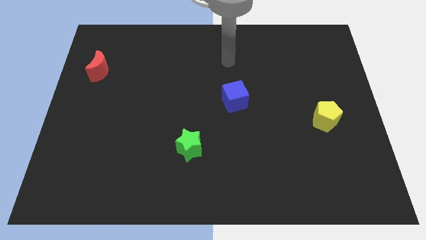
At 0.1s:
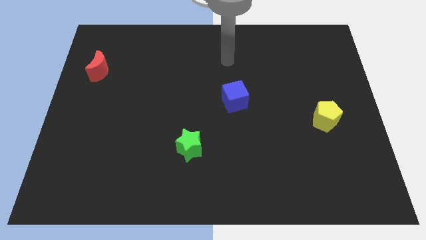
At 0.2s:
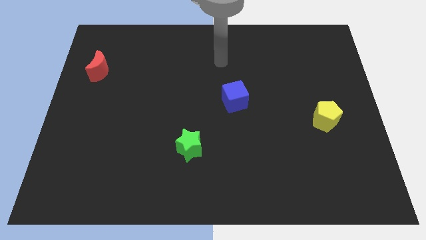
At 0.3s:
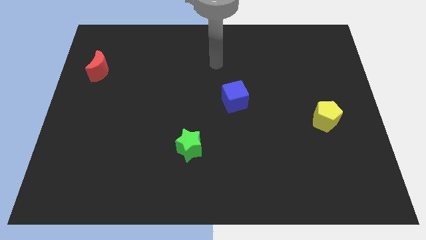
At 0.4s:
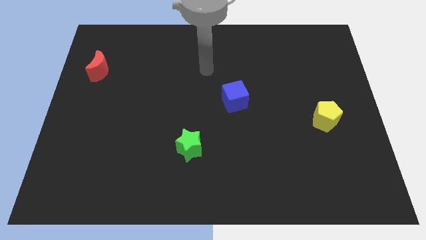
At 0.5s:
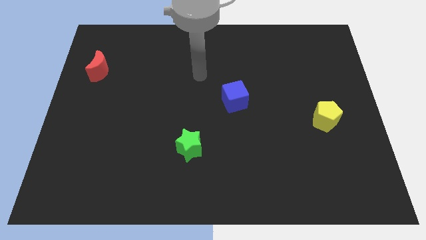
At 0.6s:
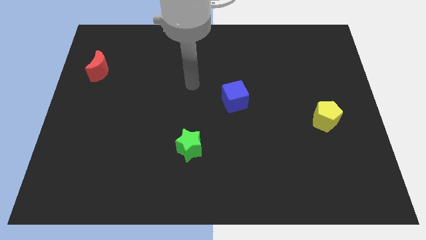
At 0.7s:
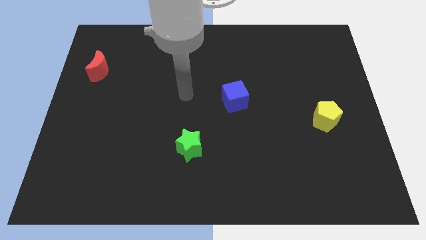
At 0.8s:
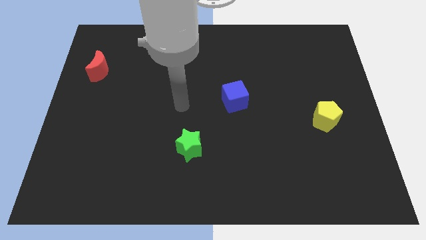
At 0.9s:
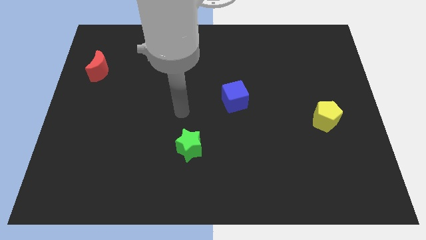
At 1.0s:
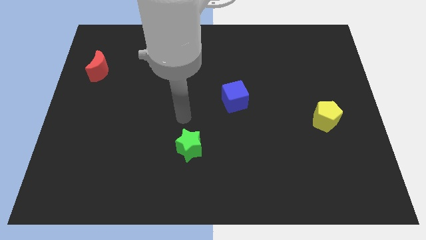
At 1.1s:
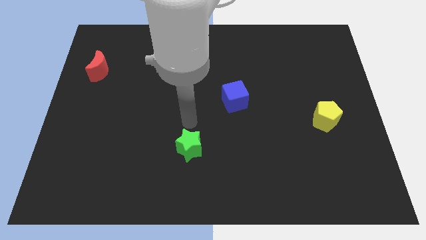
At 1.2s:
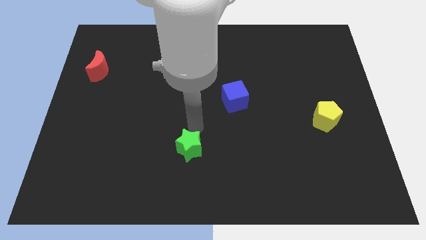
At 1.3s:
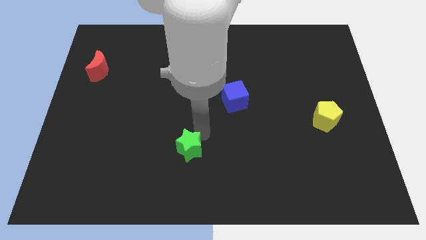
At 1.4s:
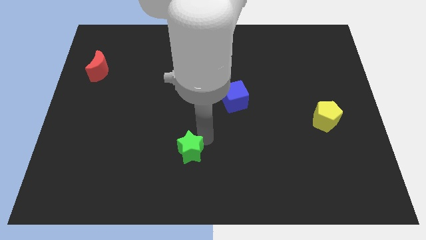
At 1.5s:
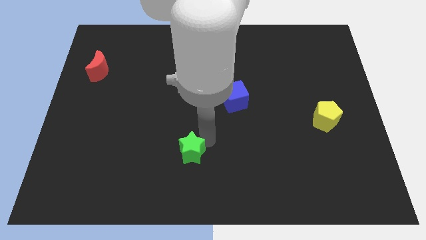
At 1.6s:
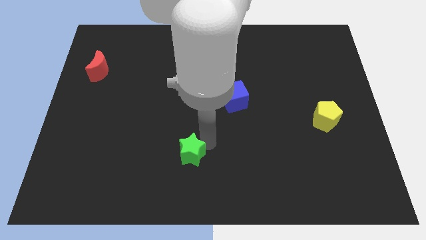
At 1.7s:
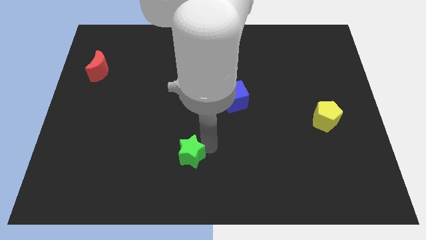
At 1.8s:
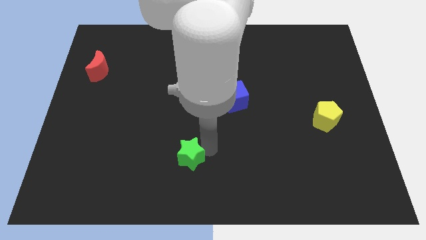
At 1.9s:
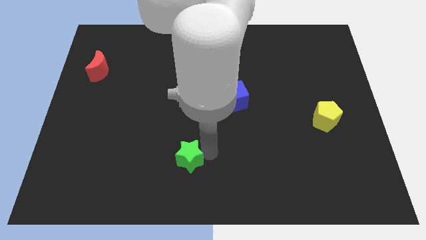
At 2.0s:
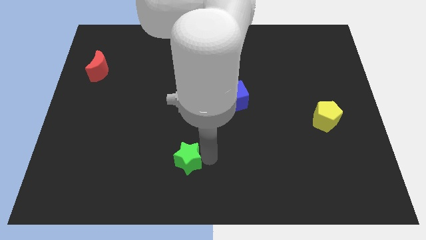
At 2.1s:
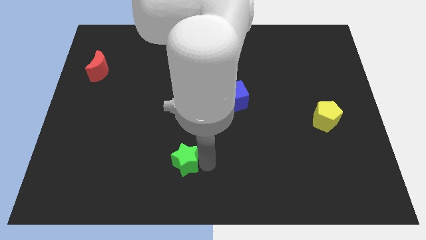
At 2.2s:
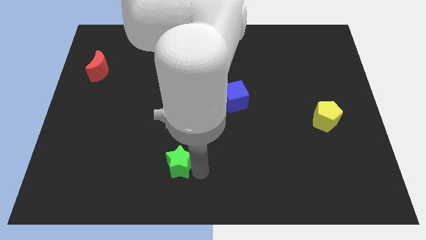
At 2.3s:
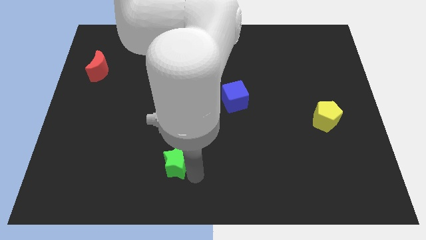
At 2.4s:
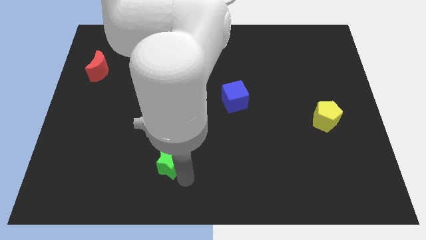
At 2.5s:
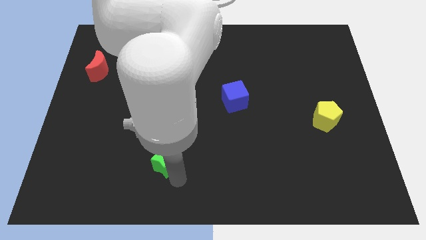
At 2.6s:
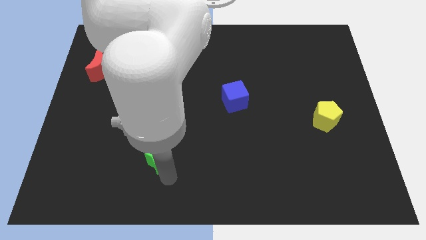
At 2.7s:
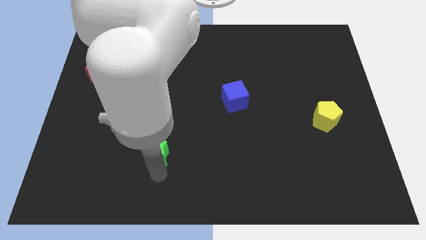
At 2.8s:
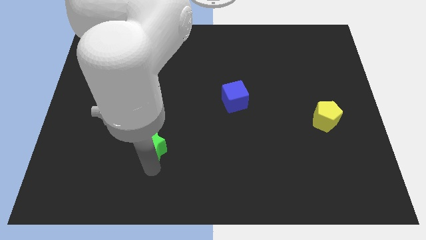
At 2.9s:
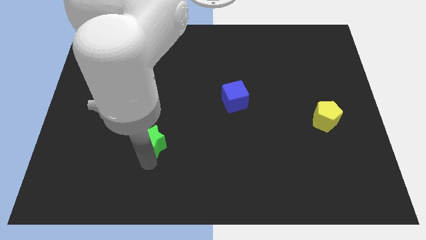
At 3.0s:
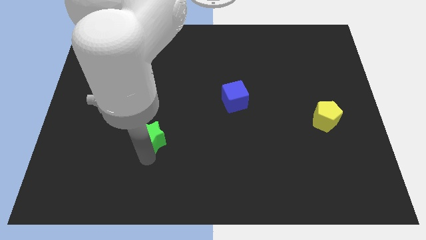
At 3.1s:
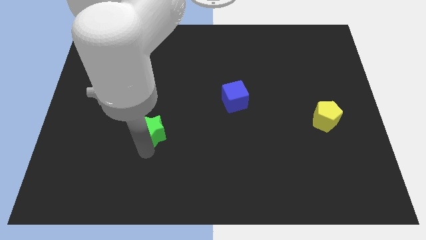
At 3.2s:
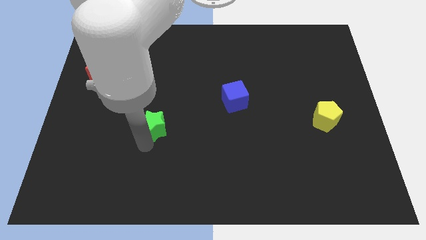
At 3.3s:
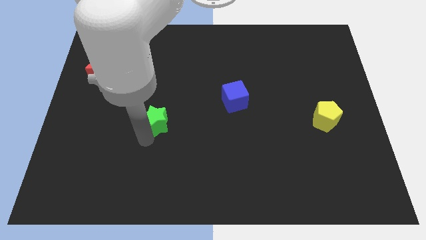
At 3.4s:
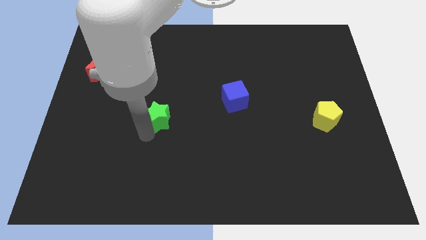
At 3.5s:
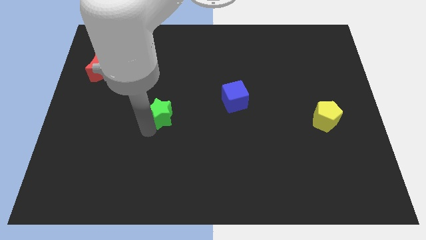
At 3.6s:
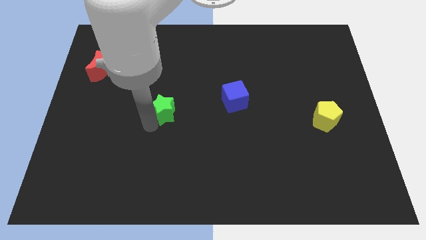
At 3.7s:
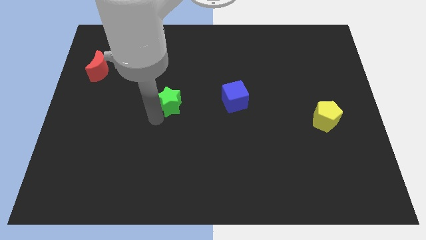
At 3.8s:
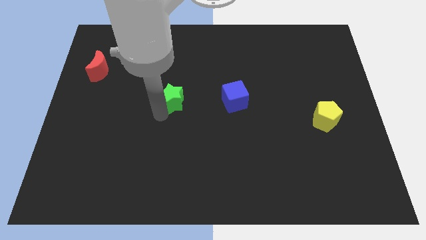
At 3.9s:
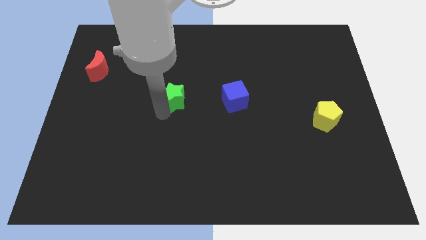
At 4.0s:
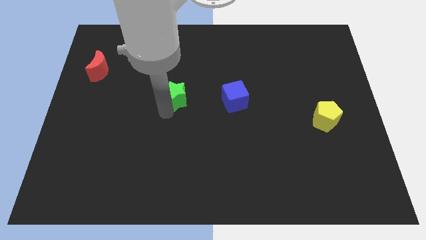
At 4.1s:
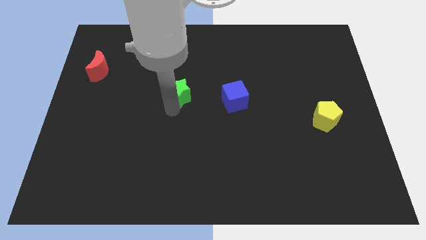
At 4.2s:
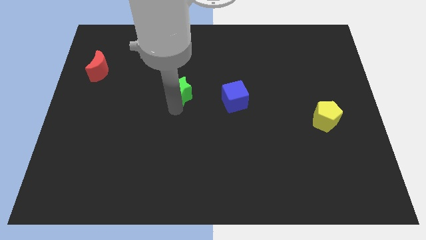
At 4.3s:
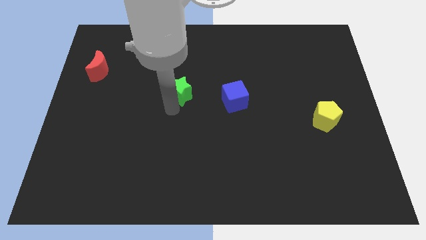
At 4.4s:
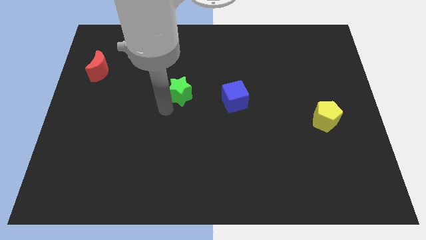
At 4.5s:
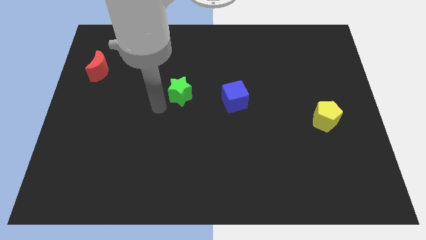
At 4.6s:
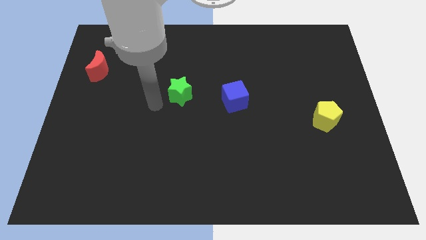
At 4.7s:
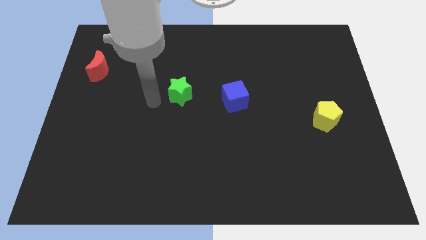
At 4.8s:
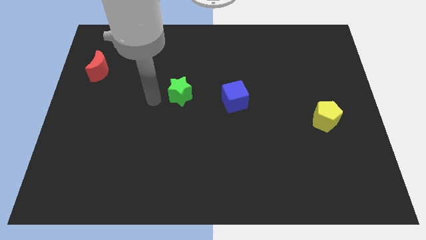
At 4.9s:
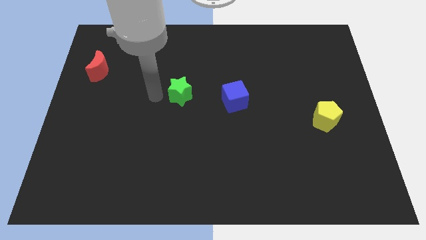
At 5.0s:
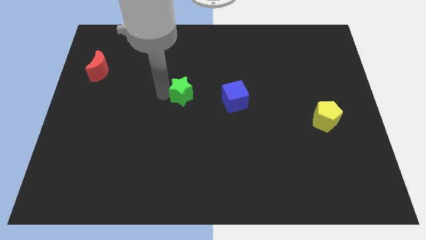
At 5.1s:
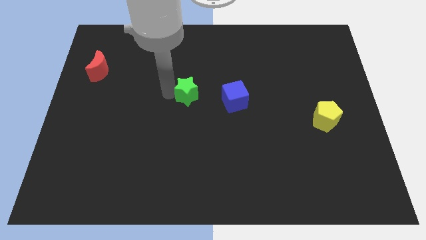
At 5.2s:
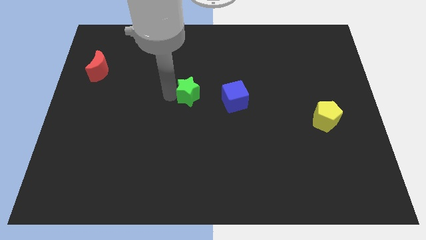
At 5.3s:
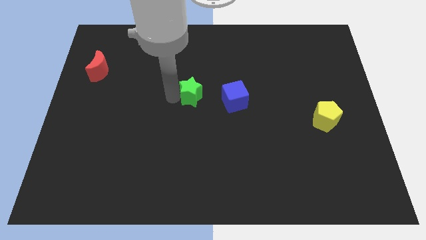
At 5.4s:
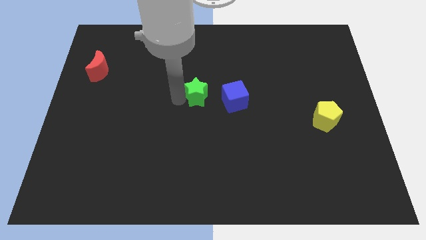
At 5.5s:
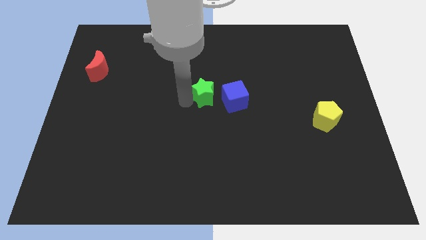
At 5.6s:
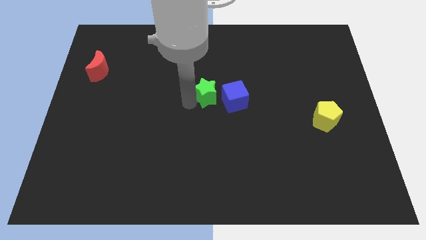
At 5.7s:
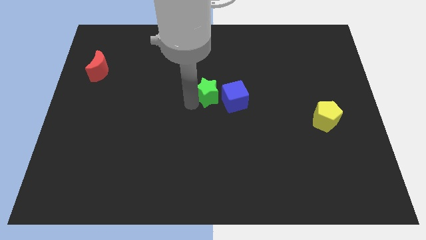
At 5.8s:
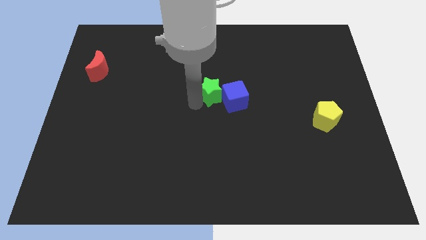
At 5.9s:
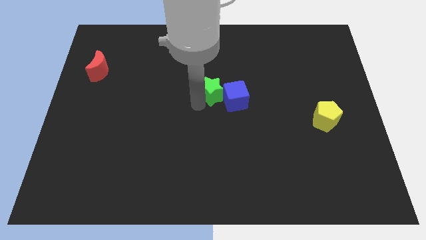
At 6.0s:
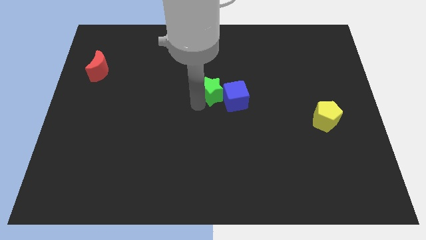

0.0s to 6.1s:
move the green star close to the cube

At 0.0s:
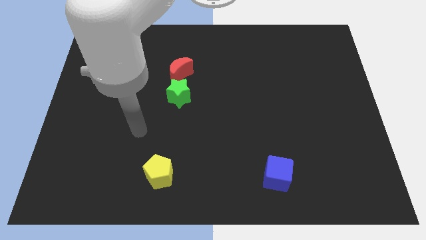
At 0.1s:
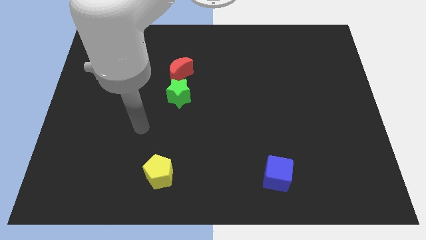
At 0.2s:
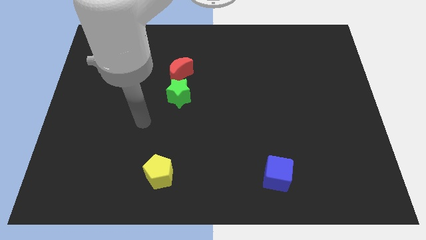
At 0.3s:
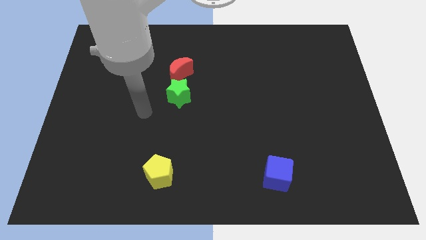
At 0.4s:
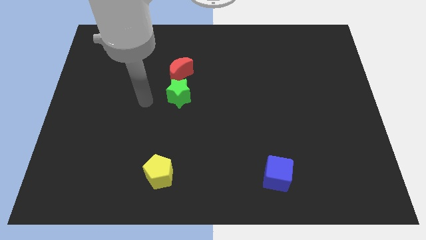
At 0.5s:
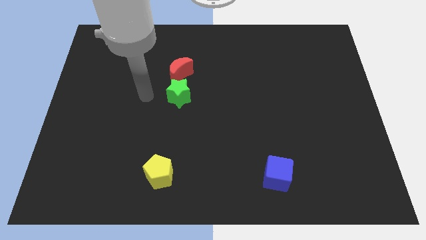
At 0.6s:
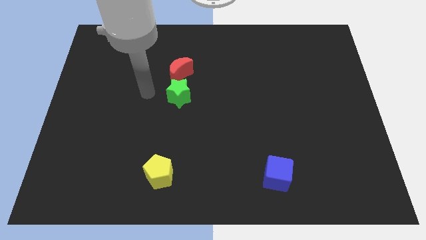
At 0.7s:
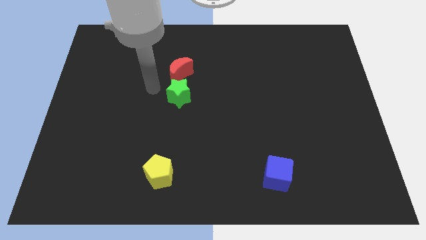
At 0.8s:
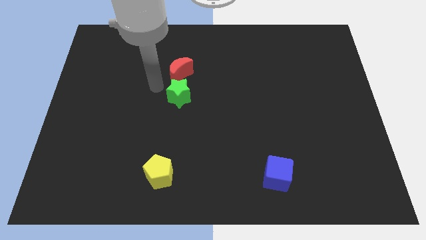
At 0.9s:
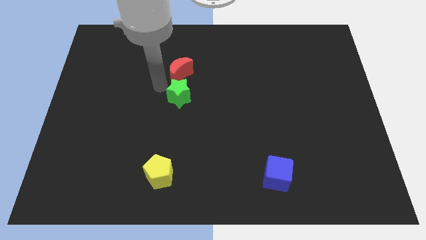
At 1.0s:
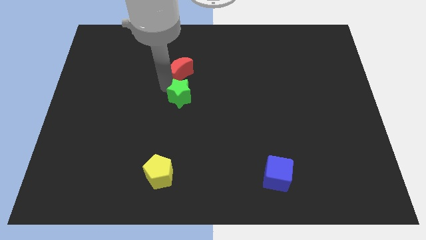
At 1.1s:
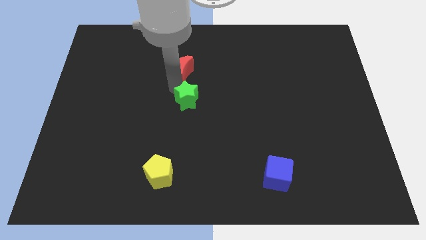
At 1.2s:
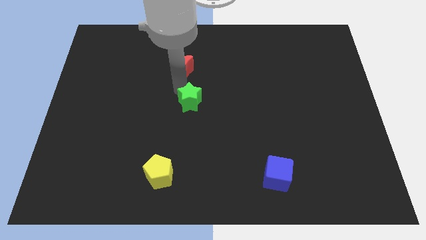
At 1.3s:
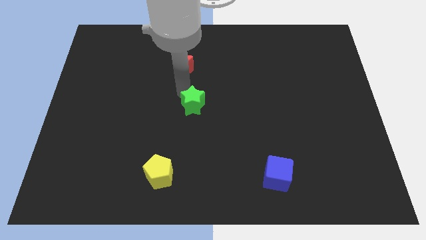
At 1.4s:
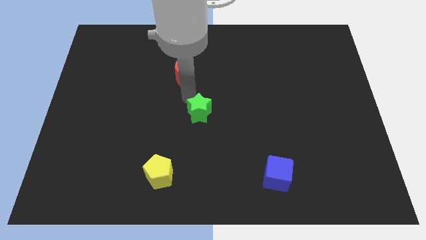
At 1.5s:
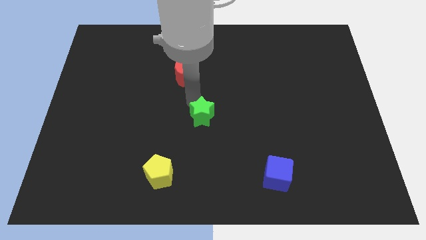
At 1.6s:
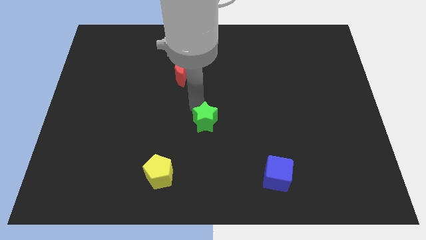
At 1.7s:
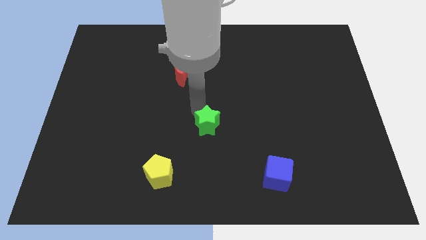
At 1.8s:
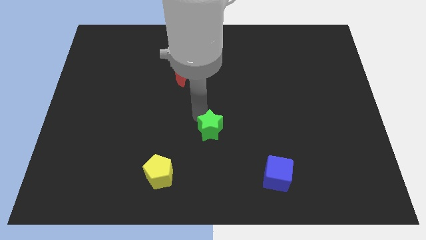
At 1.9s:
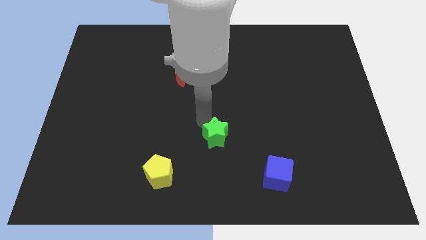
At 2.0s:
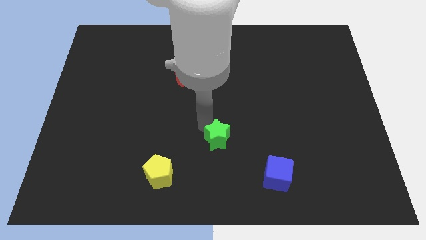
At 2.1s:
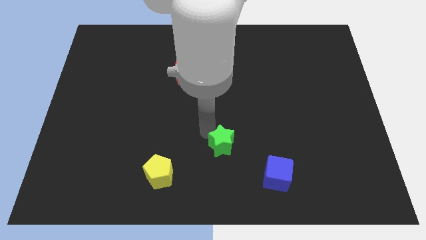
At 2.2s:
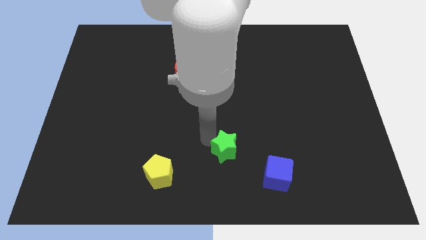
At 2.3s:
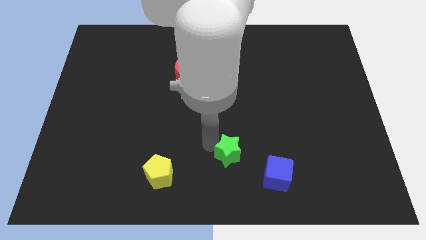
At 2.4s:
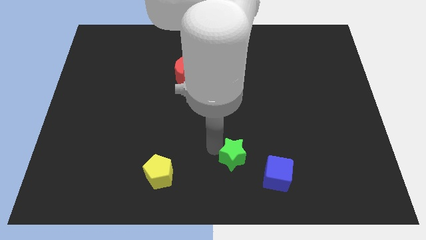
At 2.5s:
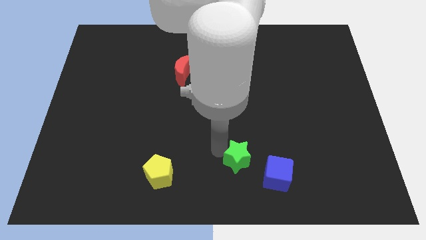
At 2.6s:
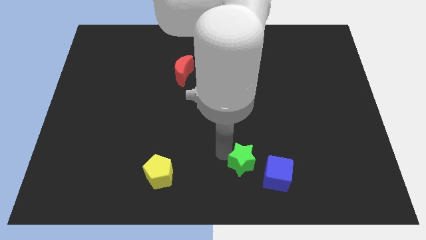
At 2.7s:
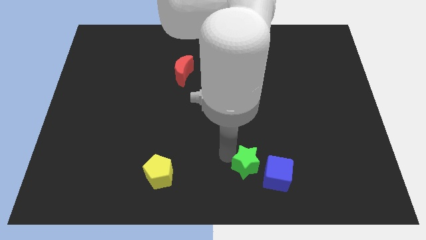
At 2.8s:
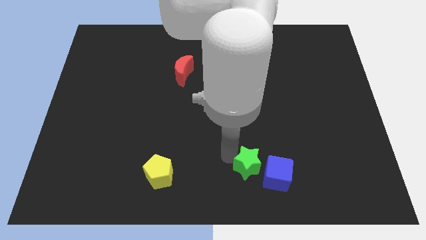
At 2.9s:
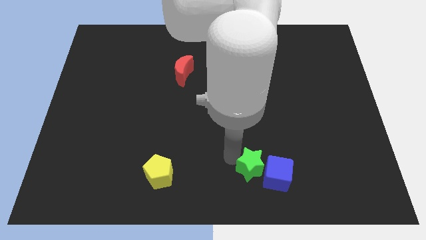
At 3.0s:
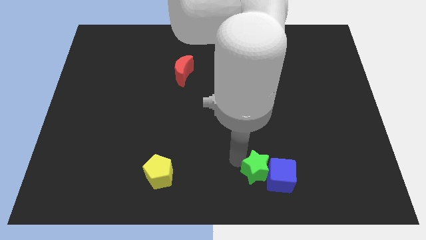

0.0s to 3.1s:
move the green block towards the blue block
